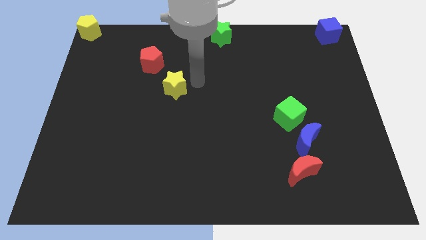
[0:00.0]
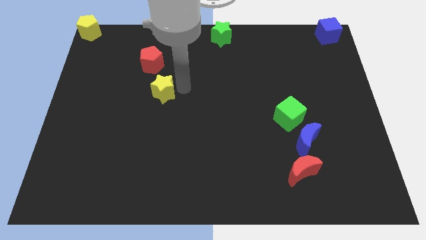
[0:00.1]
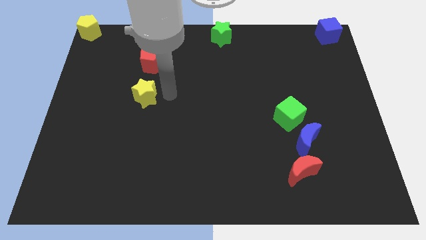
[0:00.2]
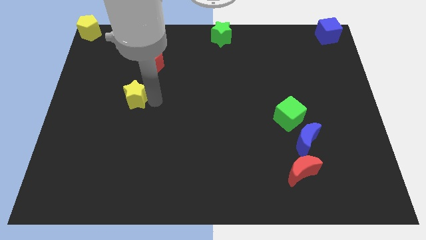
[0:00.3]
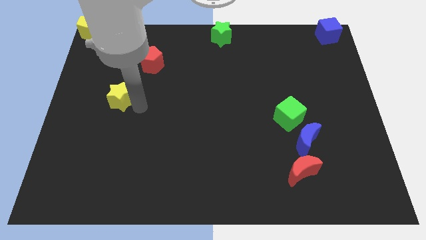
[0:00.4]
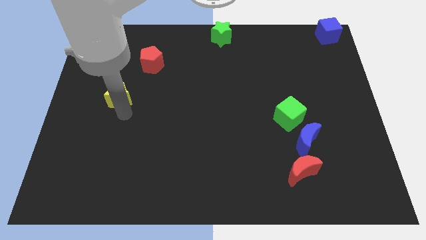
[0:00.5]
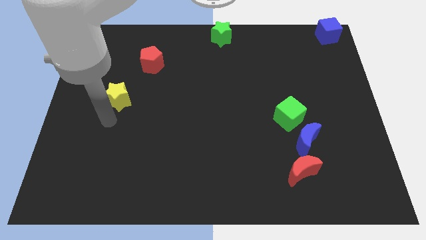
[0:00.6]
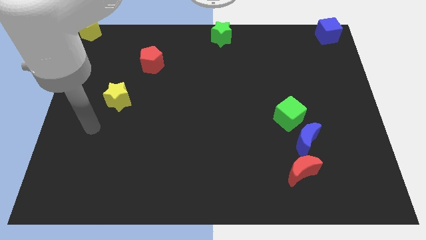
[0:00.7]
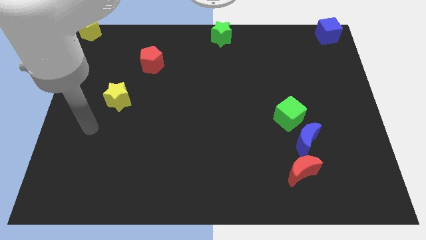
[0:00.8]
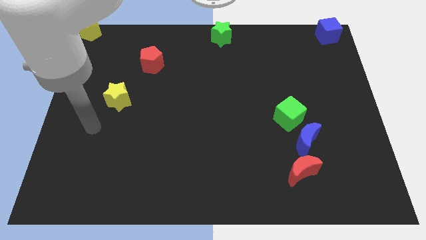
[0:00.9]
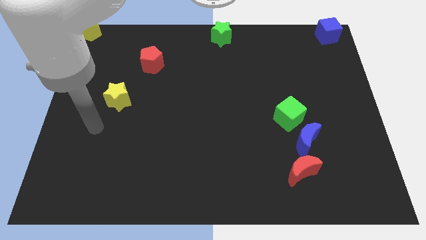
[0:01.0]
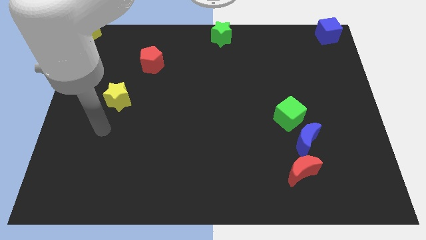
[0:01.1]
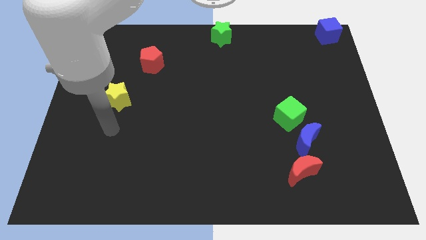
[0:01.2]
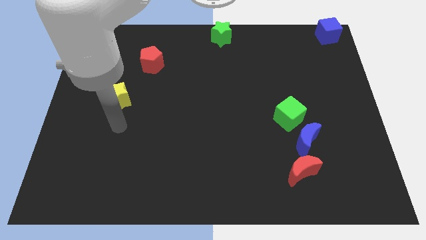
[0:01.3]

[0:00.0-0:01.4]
drag the yellow star diagonally bottom left to the red pentagon

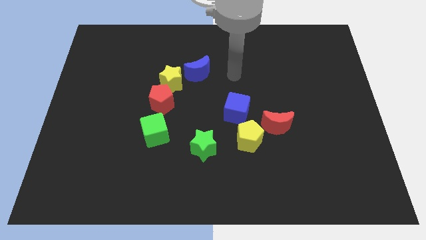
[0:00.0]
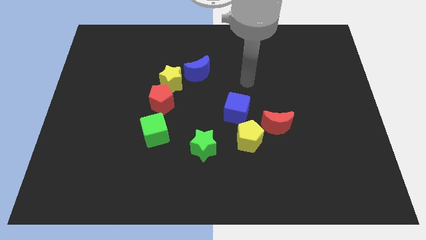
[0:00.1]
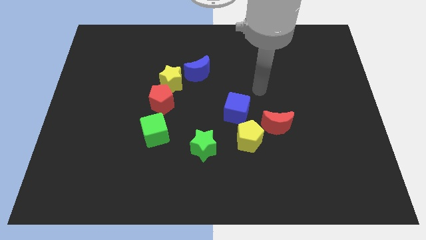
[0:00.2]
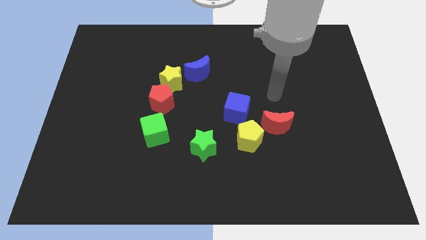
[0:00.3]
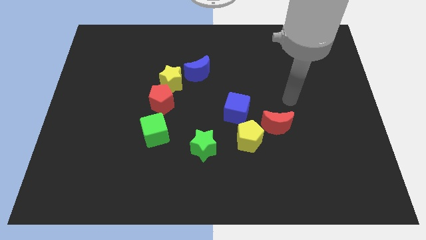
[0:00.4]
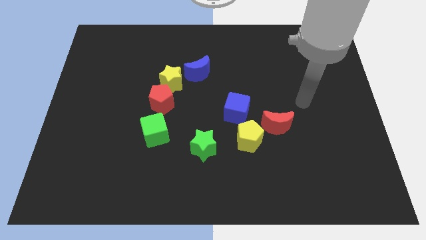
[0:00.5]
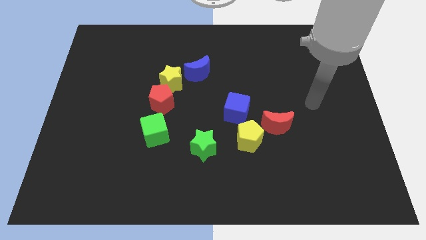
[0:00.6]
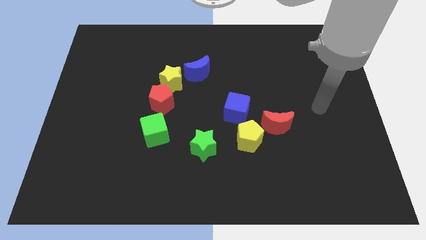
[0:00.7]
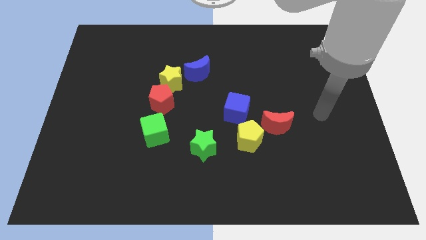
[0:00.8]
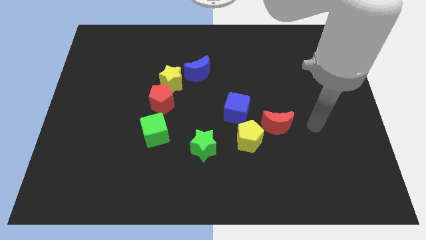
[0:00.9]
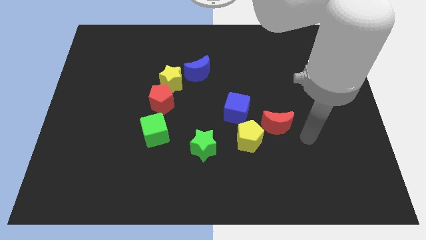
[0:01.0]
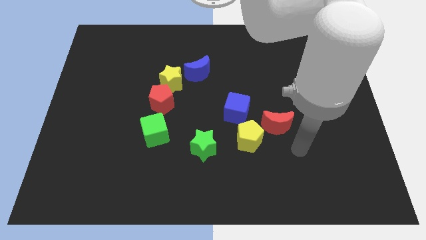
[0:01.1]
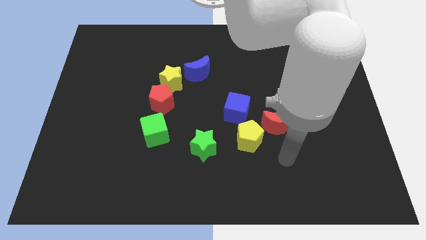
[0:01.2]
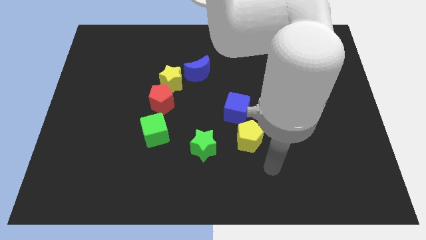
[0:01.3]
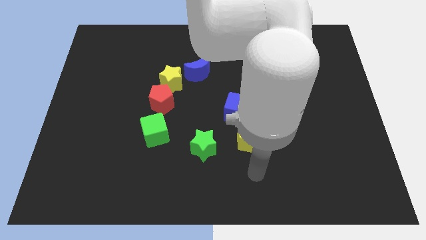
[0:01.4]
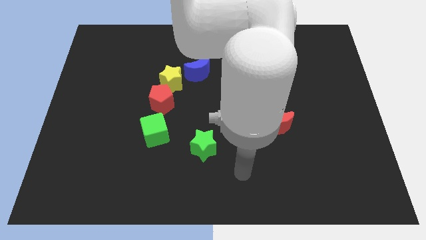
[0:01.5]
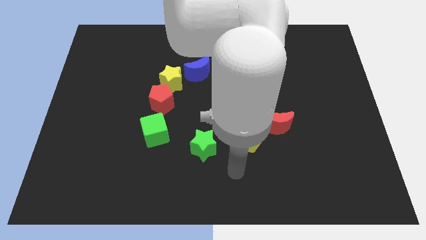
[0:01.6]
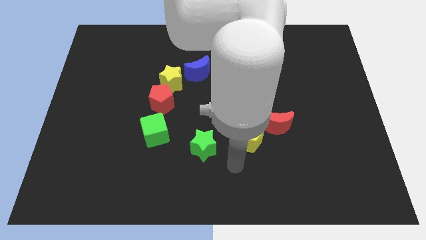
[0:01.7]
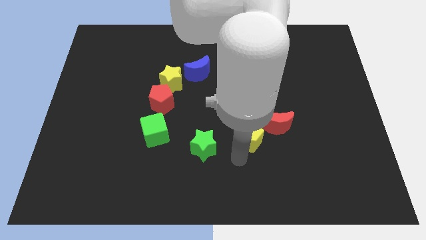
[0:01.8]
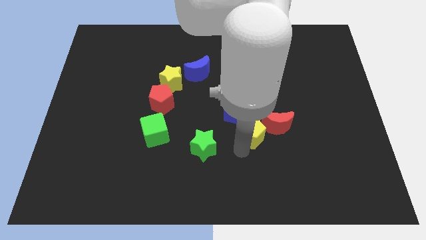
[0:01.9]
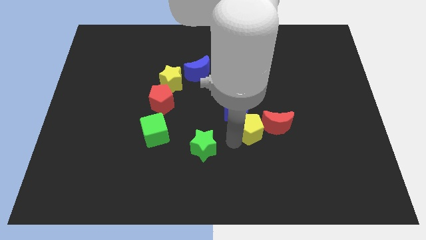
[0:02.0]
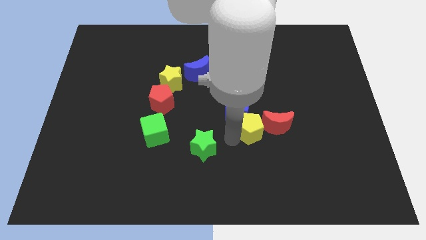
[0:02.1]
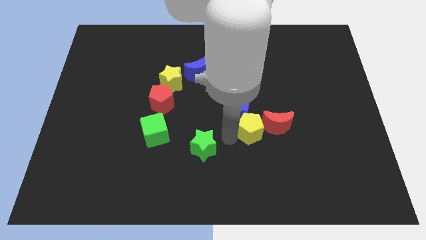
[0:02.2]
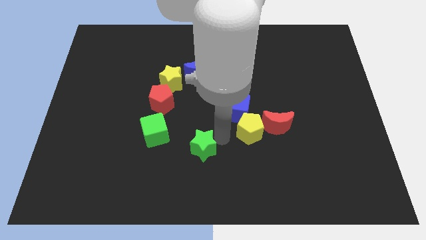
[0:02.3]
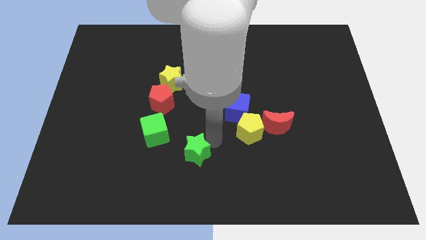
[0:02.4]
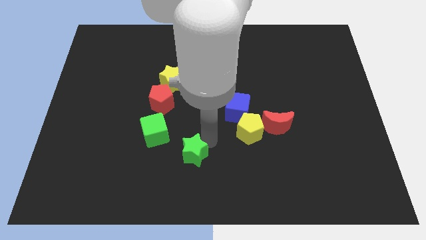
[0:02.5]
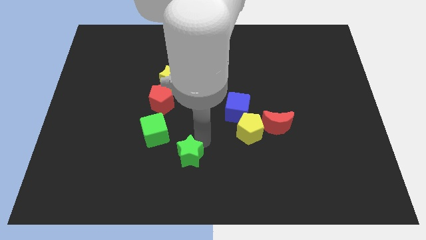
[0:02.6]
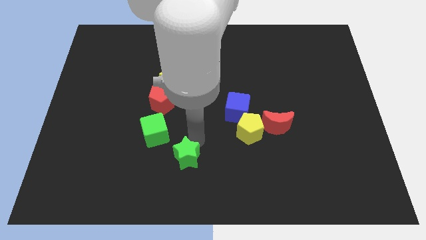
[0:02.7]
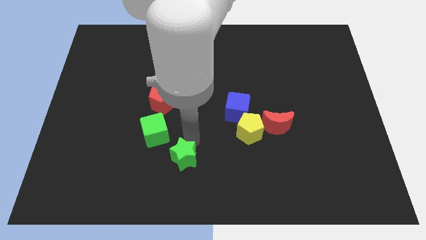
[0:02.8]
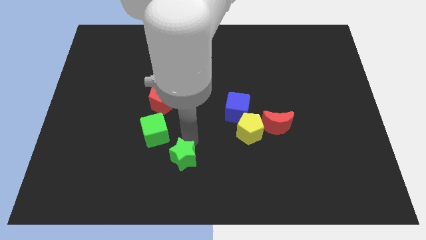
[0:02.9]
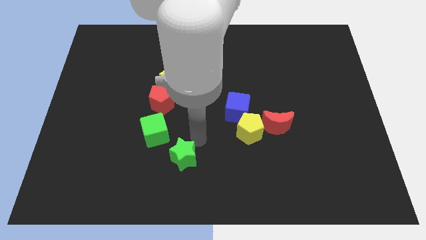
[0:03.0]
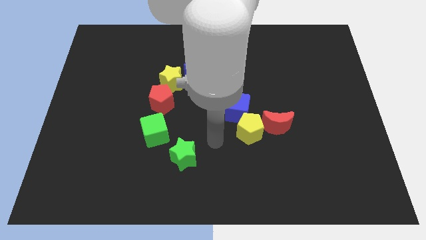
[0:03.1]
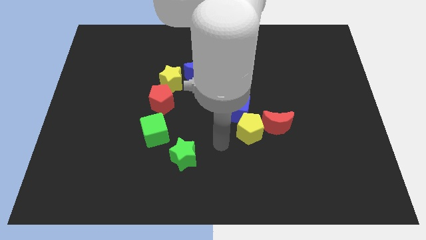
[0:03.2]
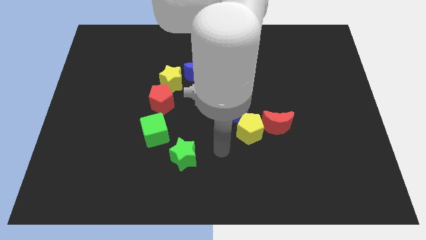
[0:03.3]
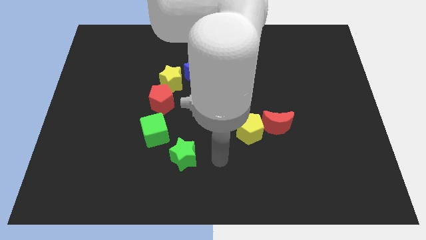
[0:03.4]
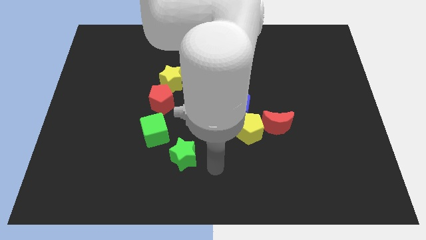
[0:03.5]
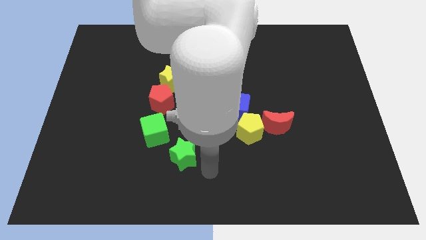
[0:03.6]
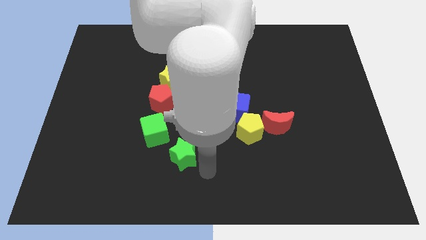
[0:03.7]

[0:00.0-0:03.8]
push the green star to the bottom right side of the green cube

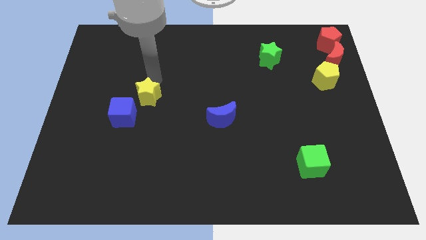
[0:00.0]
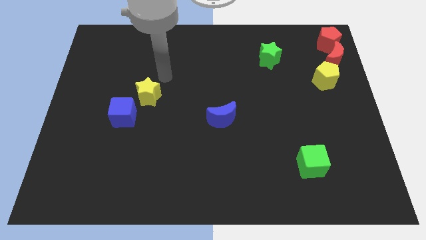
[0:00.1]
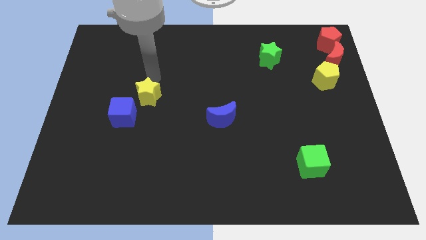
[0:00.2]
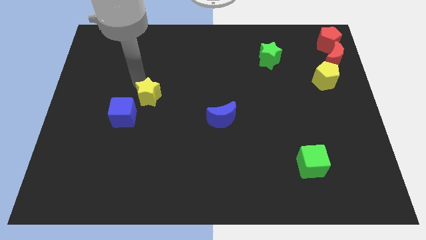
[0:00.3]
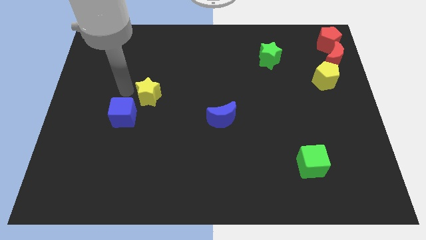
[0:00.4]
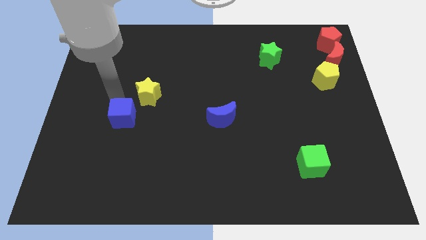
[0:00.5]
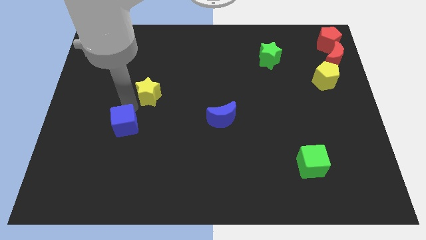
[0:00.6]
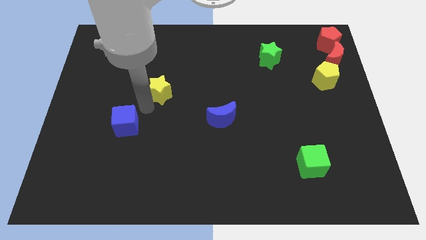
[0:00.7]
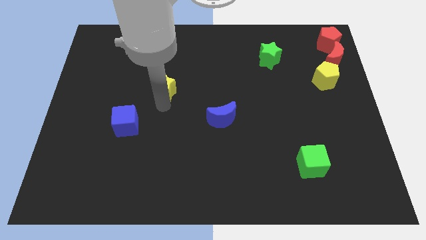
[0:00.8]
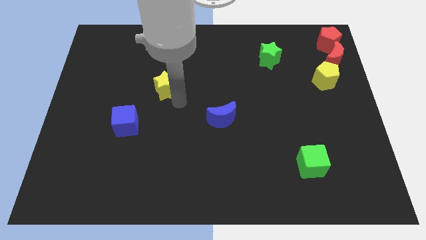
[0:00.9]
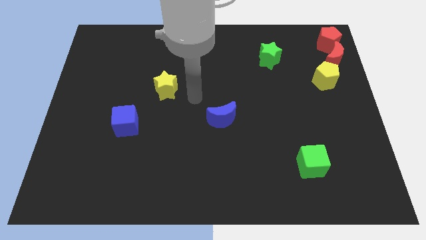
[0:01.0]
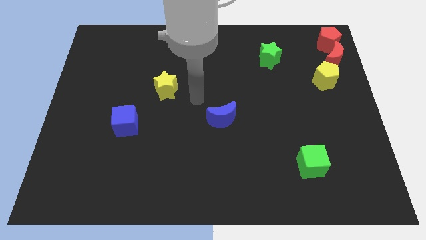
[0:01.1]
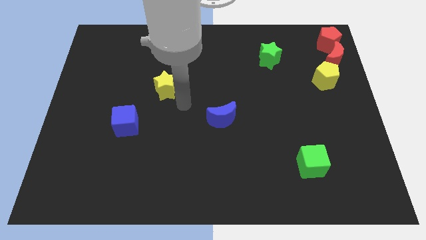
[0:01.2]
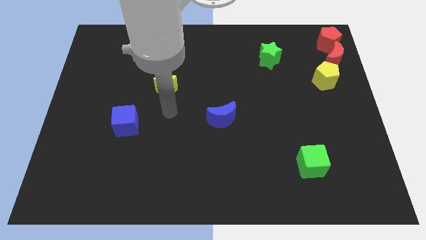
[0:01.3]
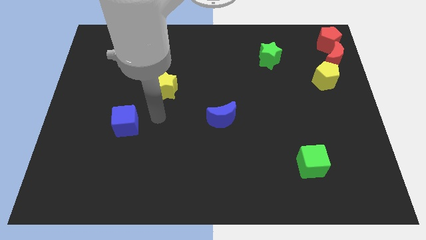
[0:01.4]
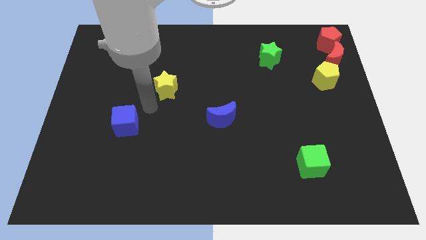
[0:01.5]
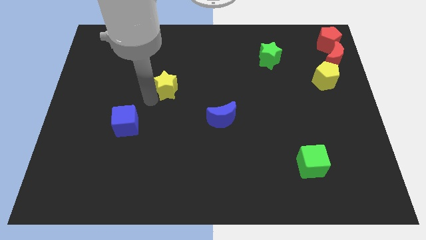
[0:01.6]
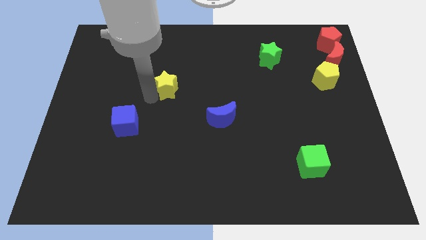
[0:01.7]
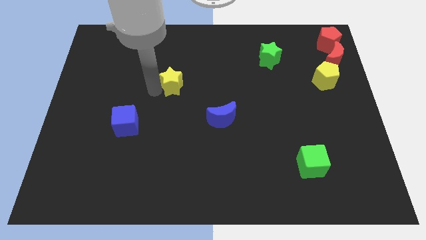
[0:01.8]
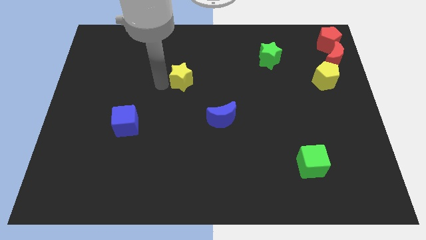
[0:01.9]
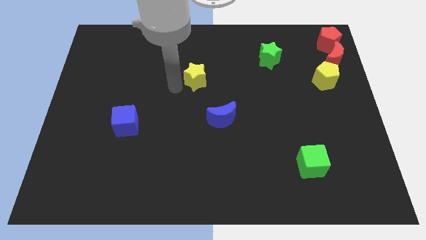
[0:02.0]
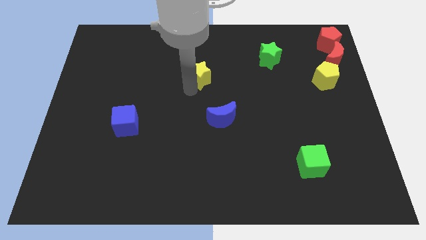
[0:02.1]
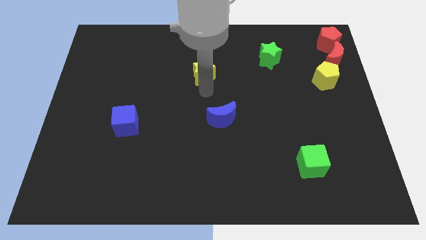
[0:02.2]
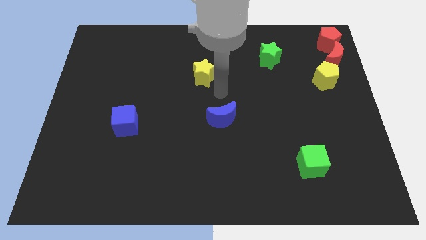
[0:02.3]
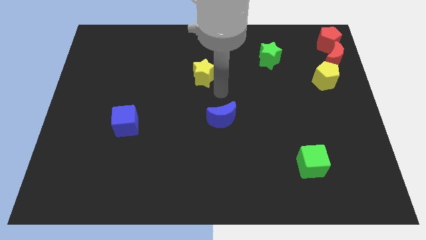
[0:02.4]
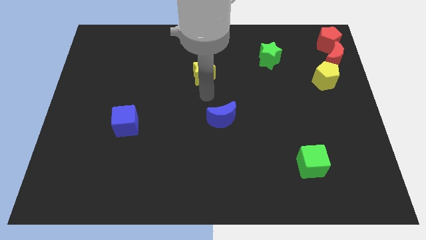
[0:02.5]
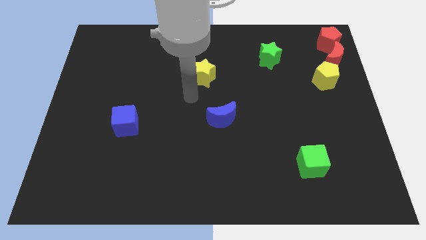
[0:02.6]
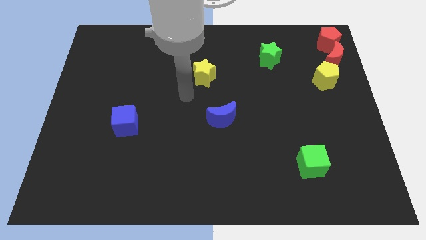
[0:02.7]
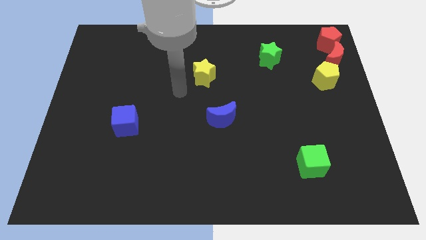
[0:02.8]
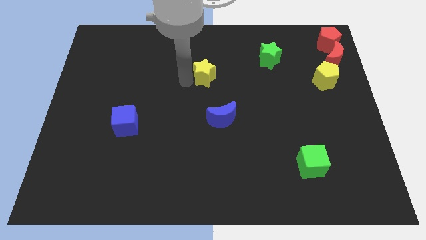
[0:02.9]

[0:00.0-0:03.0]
place the yellow star diagonally in between the blue cube and the green star

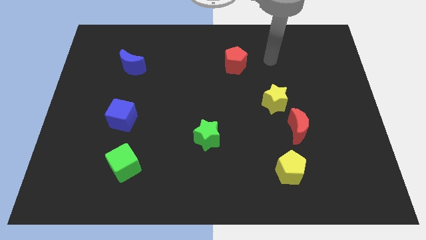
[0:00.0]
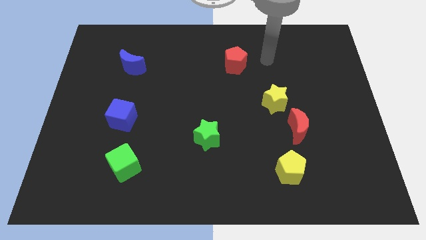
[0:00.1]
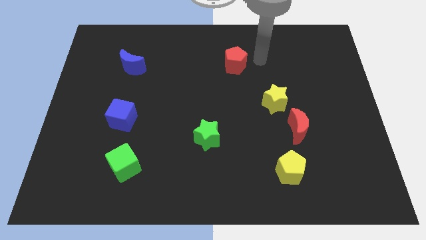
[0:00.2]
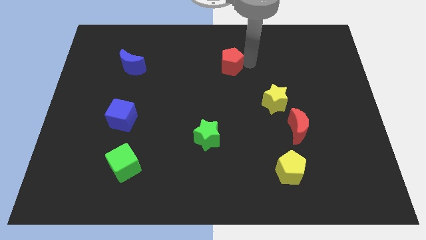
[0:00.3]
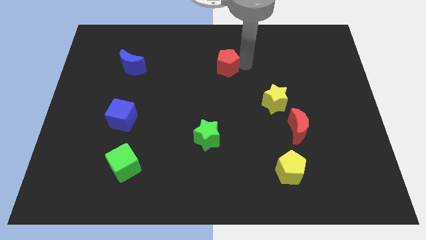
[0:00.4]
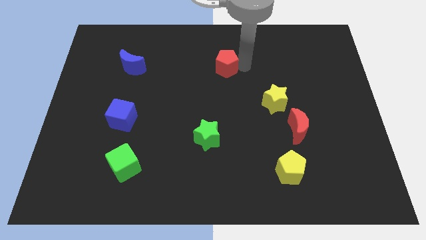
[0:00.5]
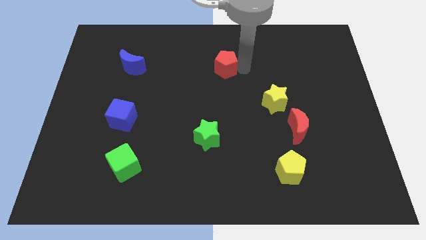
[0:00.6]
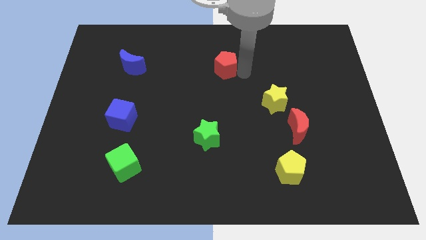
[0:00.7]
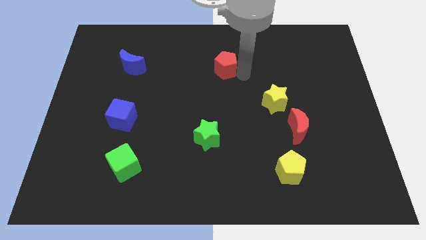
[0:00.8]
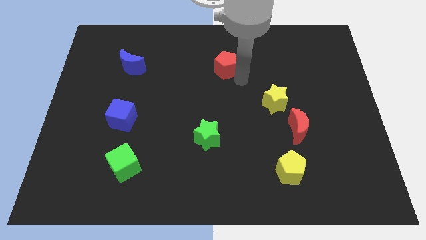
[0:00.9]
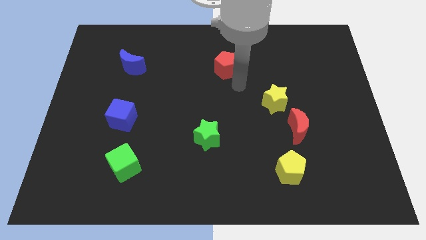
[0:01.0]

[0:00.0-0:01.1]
move the red pentagon slightly
